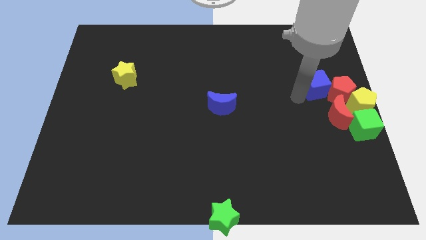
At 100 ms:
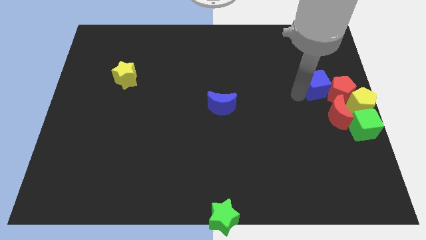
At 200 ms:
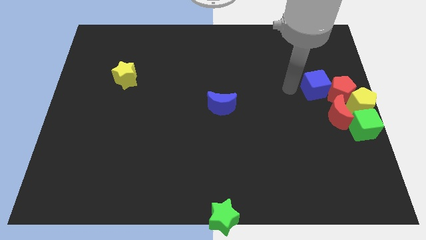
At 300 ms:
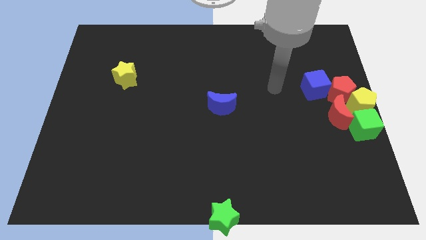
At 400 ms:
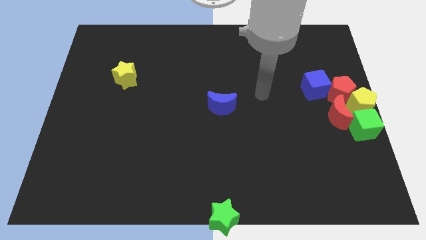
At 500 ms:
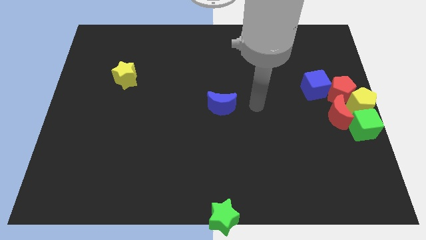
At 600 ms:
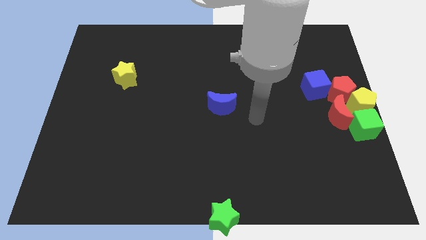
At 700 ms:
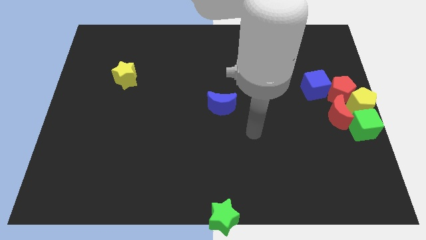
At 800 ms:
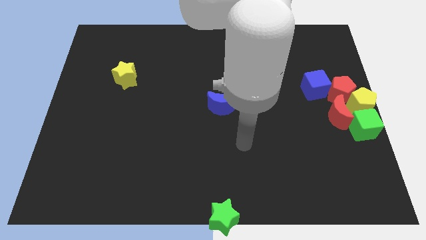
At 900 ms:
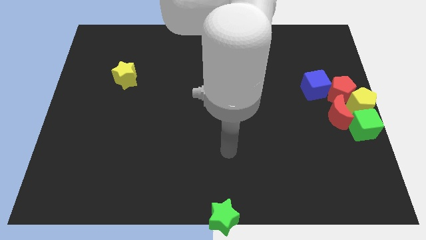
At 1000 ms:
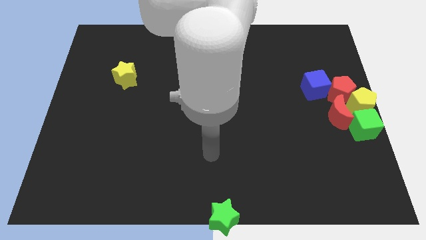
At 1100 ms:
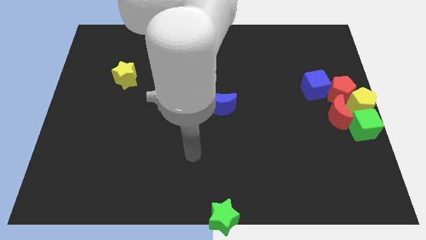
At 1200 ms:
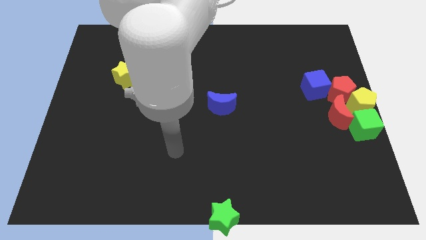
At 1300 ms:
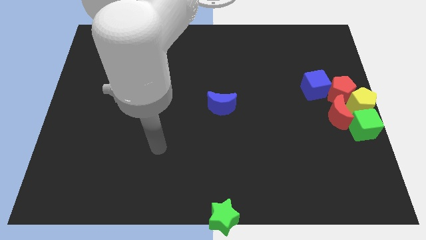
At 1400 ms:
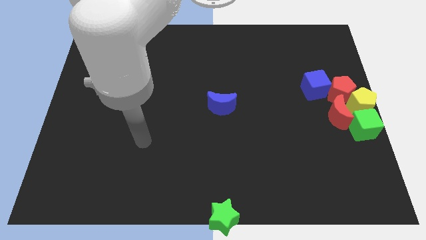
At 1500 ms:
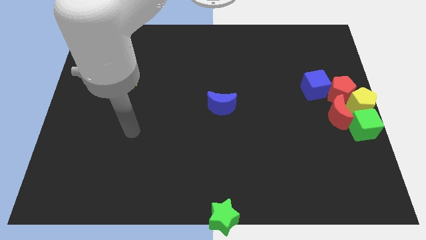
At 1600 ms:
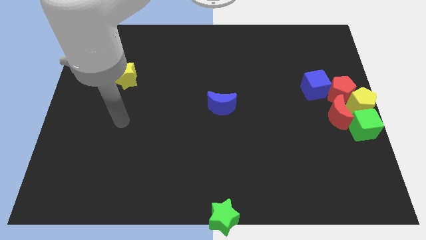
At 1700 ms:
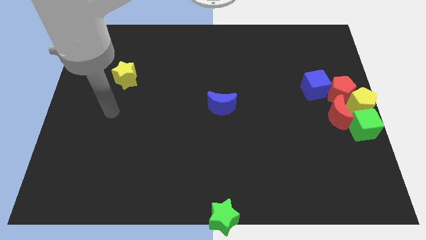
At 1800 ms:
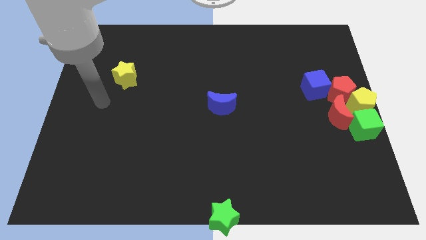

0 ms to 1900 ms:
move your arm towards the left side of the board

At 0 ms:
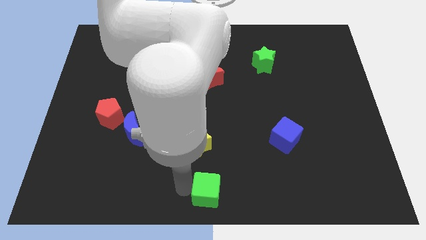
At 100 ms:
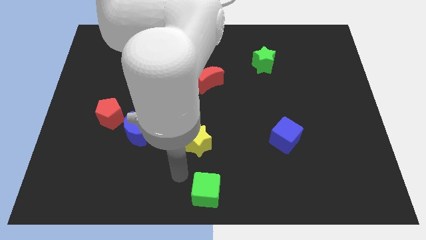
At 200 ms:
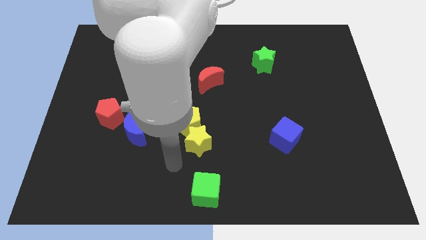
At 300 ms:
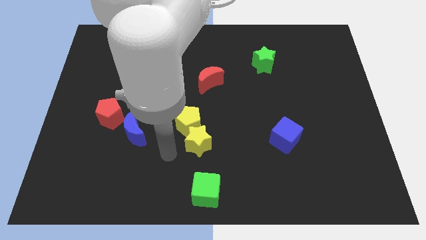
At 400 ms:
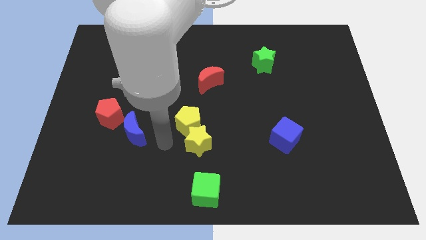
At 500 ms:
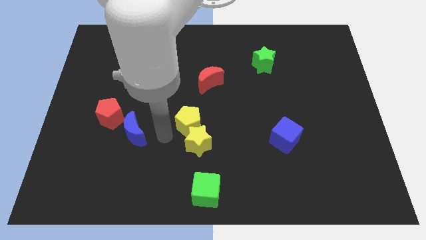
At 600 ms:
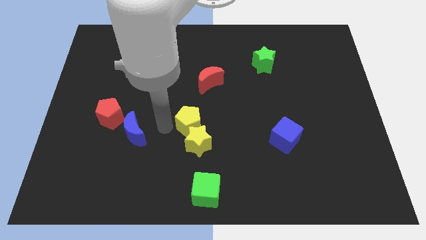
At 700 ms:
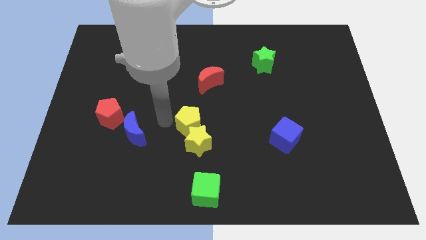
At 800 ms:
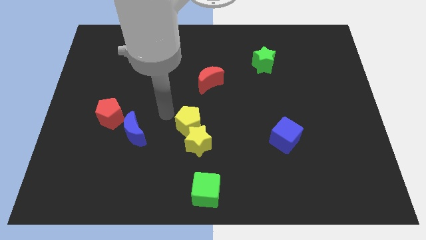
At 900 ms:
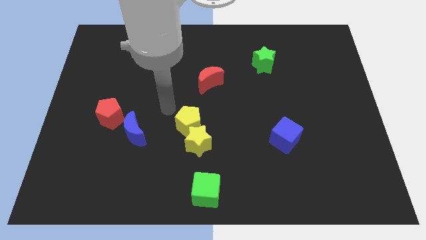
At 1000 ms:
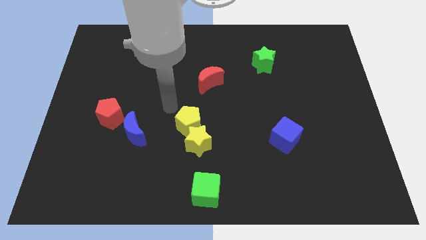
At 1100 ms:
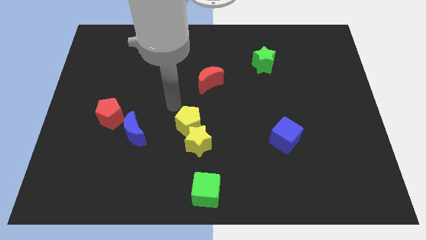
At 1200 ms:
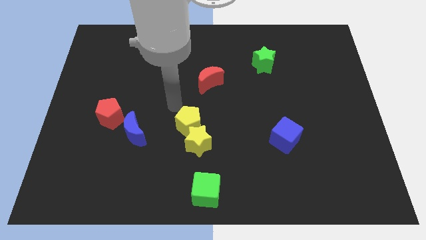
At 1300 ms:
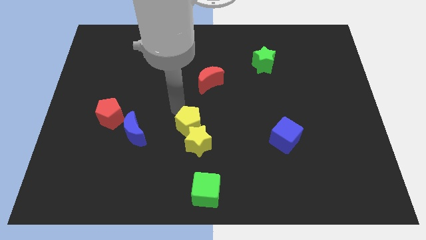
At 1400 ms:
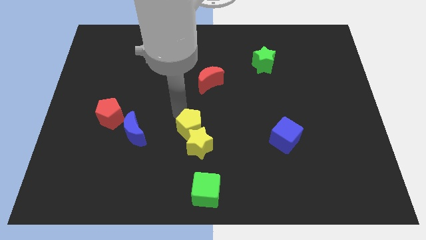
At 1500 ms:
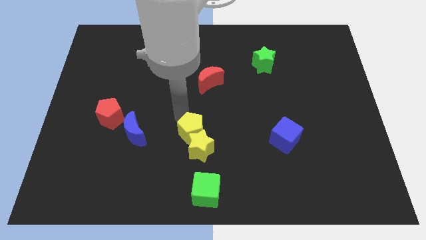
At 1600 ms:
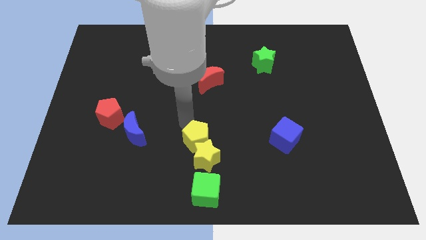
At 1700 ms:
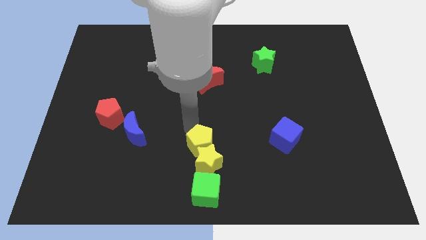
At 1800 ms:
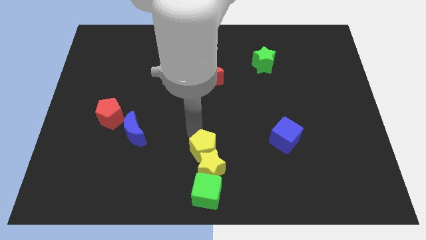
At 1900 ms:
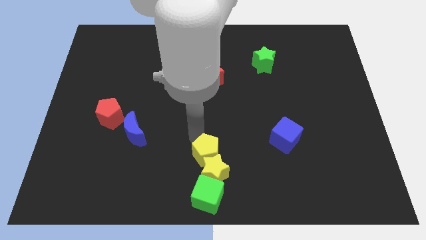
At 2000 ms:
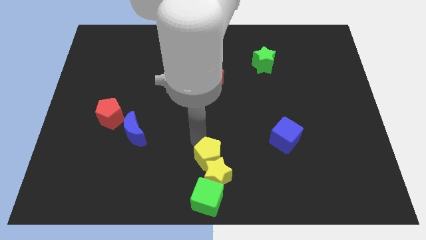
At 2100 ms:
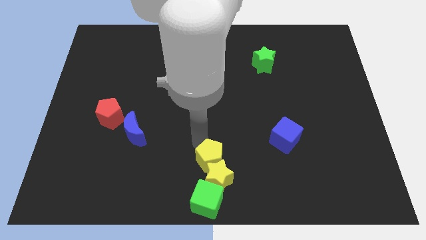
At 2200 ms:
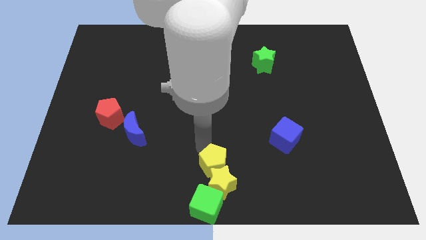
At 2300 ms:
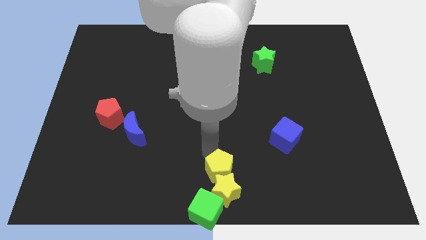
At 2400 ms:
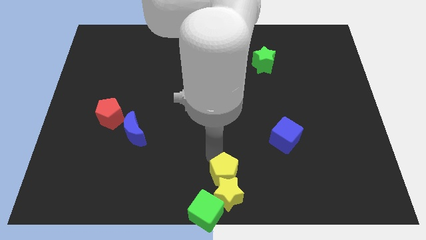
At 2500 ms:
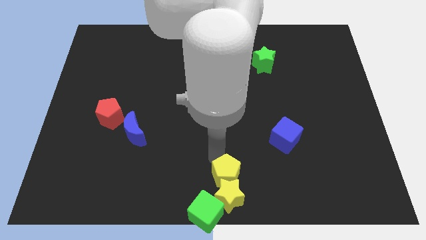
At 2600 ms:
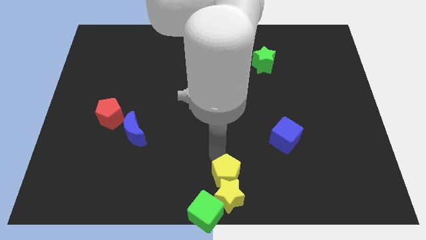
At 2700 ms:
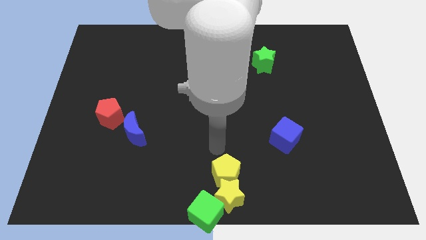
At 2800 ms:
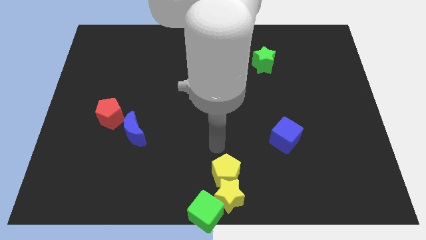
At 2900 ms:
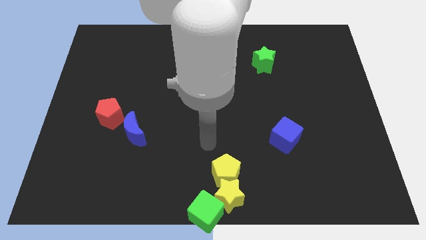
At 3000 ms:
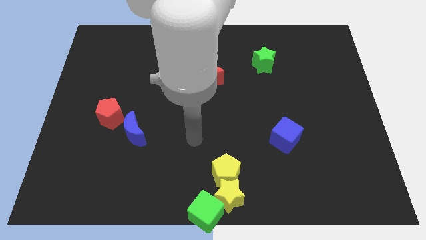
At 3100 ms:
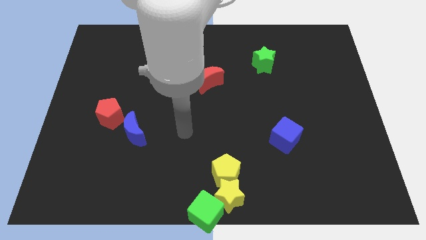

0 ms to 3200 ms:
push yellow pentagon and yellow star towards bottom of the board

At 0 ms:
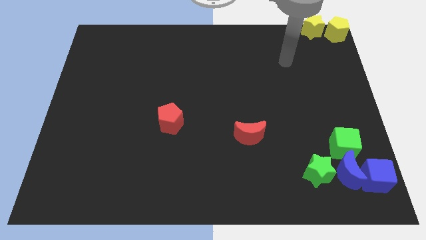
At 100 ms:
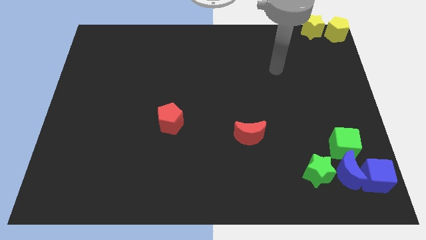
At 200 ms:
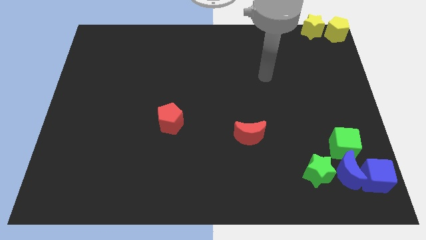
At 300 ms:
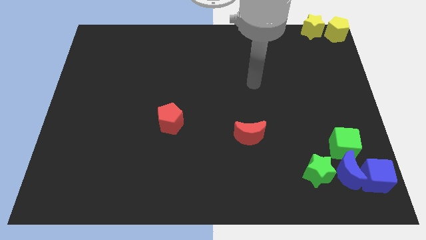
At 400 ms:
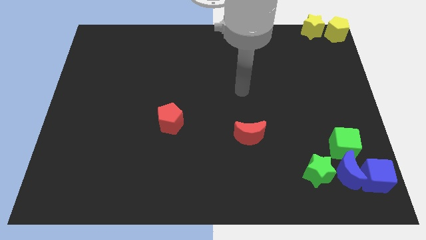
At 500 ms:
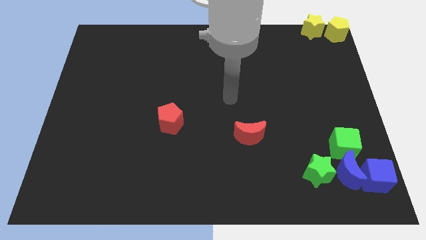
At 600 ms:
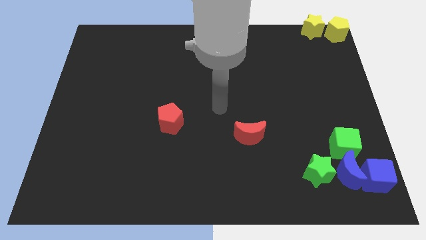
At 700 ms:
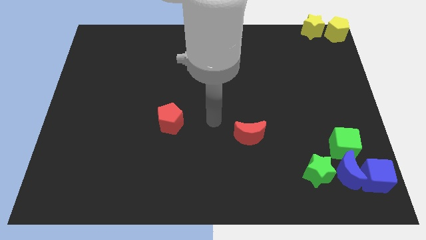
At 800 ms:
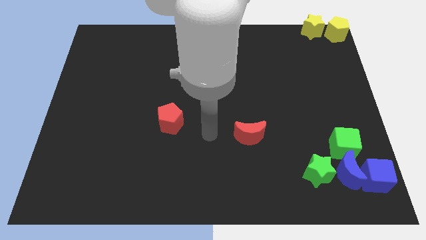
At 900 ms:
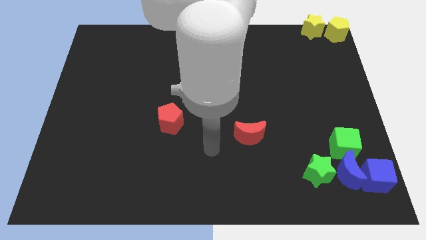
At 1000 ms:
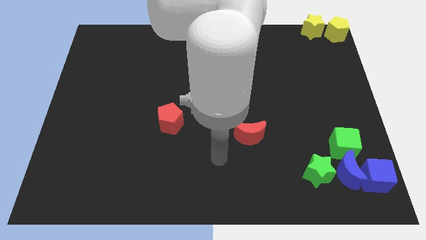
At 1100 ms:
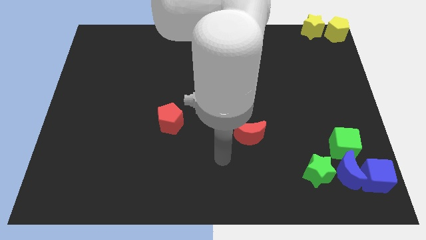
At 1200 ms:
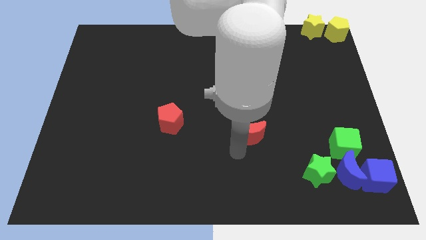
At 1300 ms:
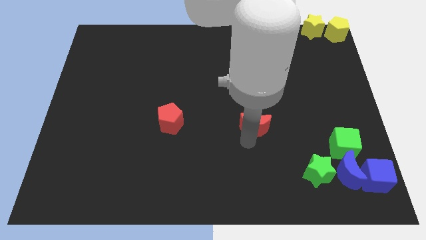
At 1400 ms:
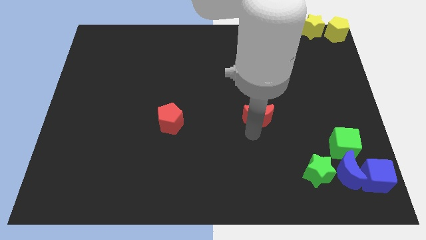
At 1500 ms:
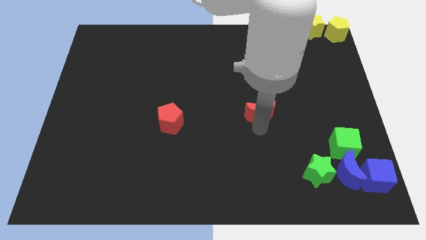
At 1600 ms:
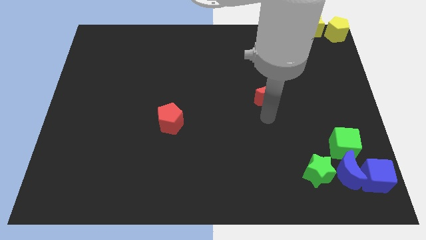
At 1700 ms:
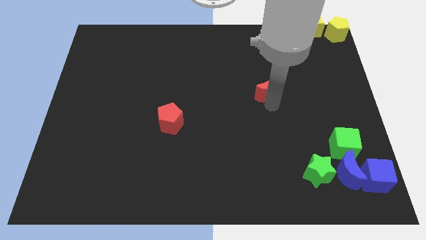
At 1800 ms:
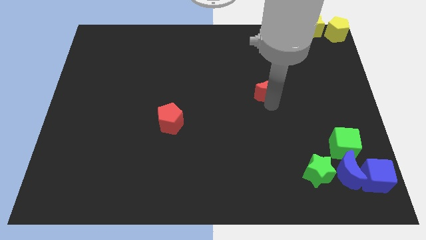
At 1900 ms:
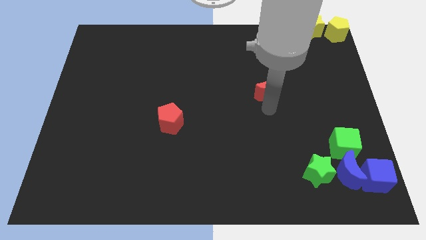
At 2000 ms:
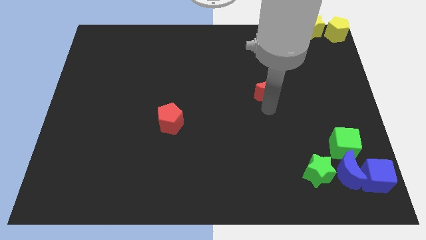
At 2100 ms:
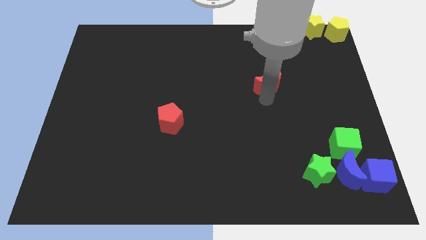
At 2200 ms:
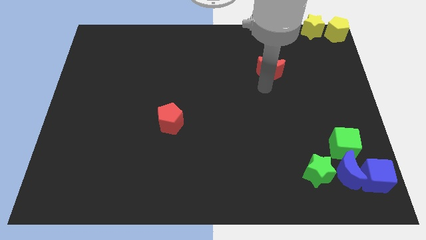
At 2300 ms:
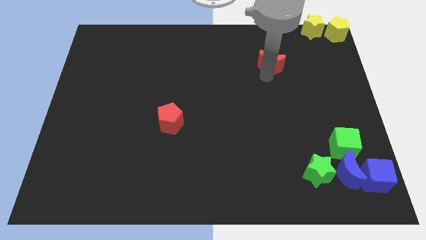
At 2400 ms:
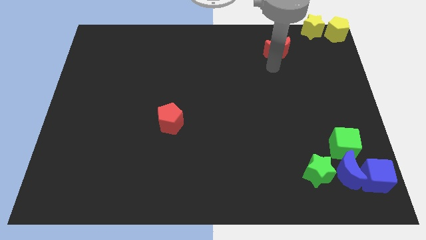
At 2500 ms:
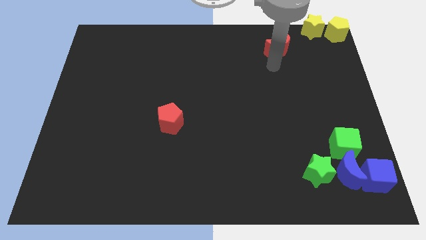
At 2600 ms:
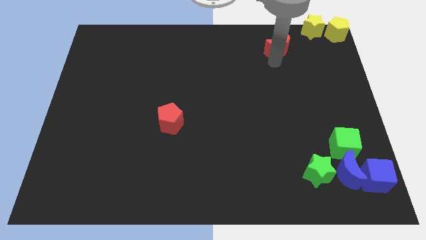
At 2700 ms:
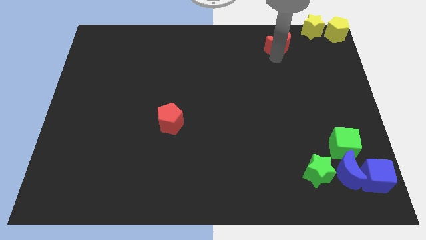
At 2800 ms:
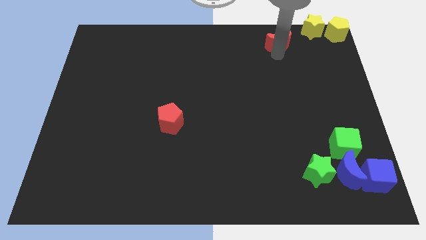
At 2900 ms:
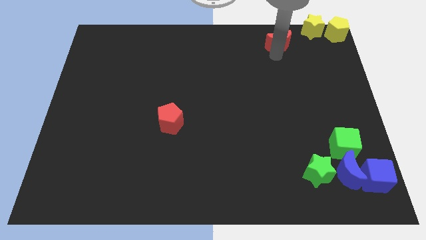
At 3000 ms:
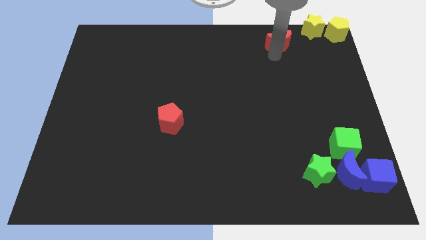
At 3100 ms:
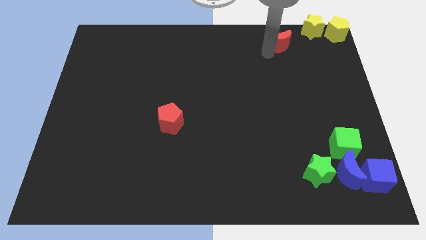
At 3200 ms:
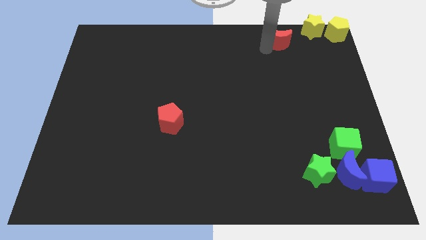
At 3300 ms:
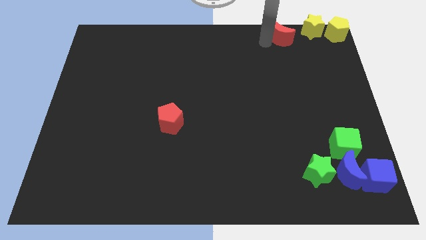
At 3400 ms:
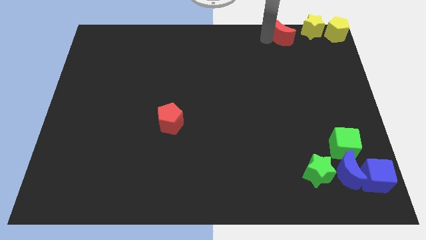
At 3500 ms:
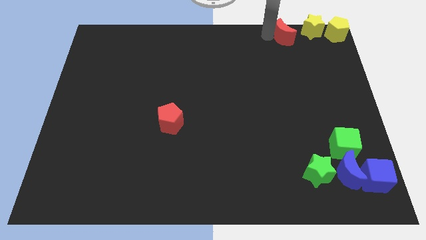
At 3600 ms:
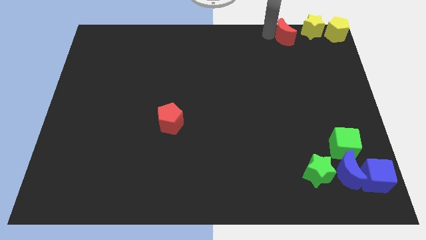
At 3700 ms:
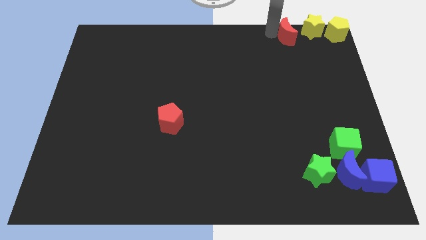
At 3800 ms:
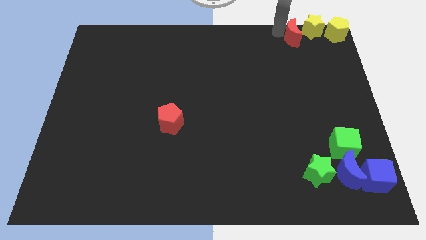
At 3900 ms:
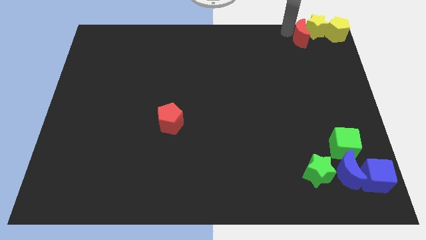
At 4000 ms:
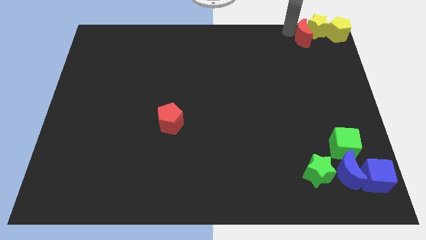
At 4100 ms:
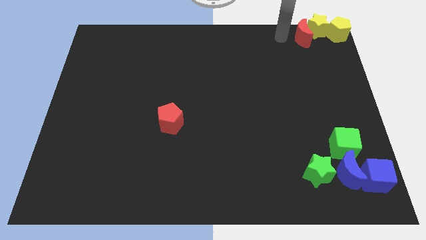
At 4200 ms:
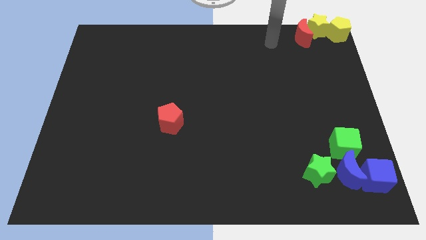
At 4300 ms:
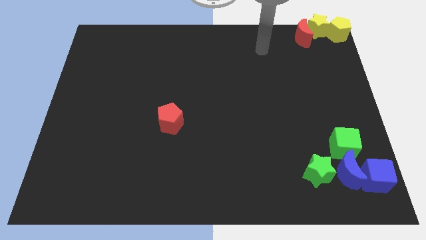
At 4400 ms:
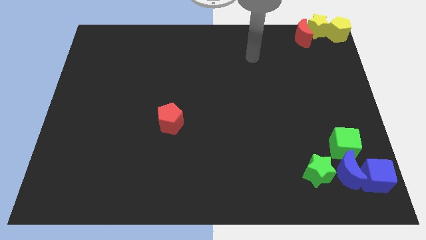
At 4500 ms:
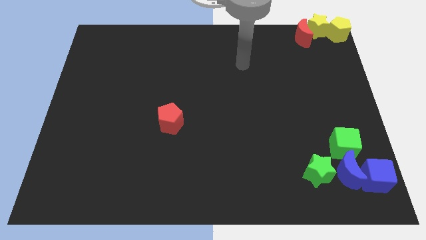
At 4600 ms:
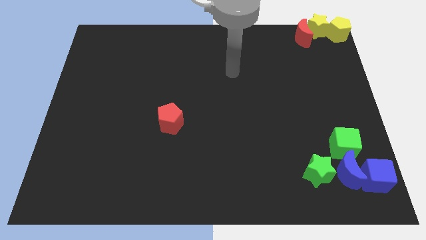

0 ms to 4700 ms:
push the red moon into the yellow star
